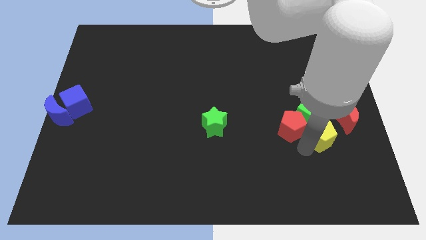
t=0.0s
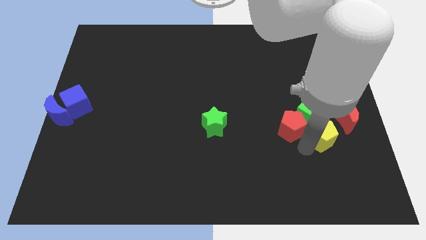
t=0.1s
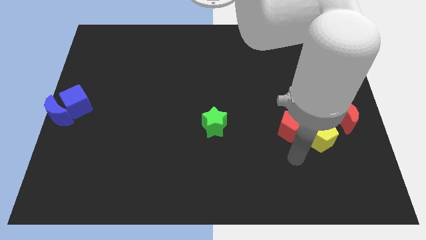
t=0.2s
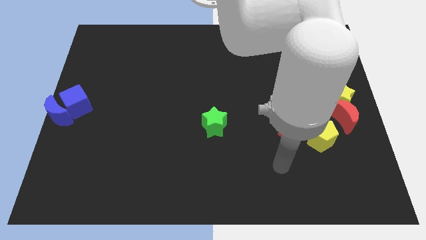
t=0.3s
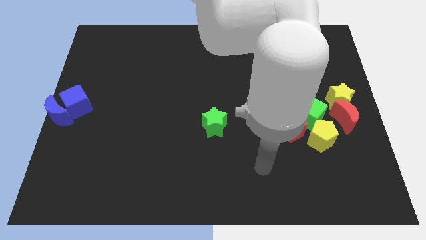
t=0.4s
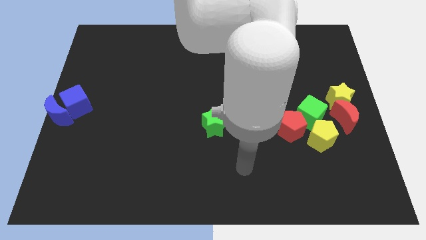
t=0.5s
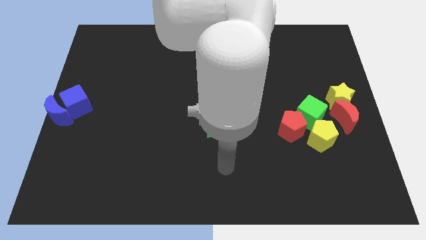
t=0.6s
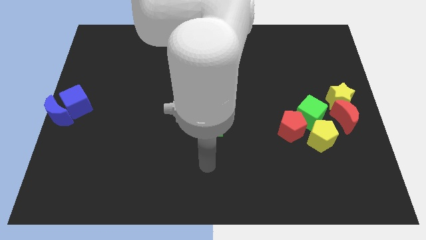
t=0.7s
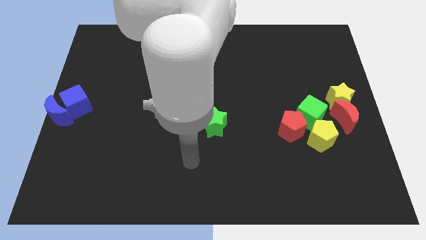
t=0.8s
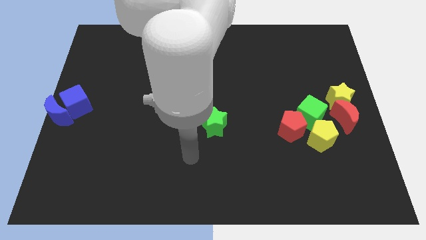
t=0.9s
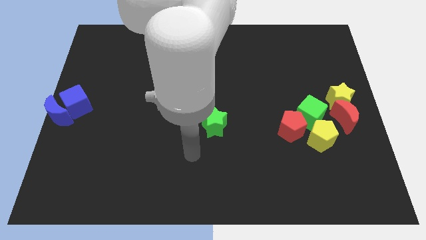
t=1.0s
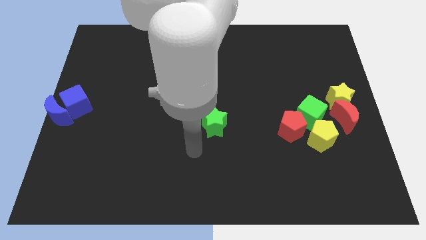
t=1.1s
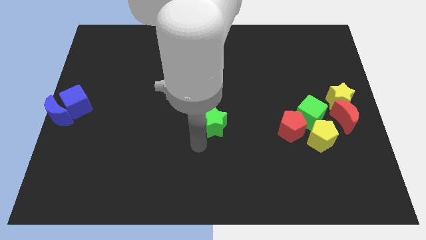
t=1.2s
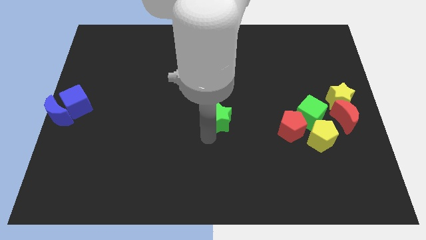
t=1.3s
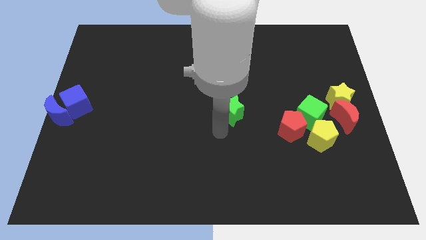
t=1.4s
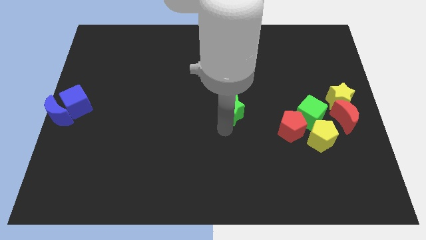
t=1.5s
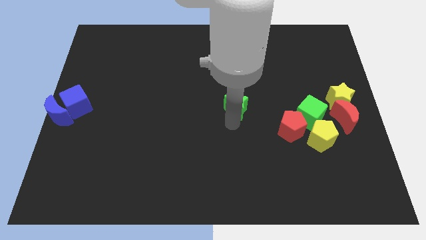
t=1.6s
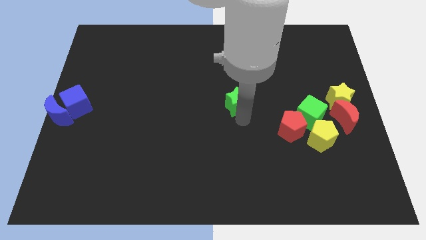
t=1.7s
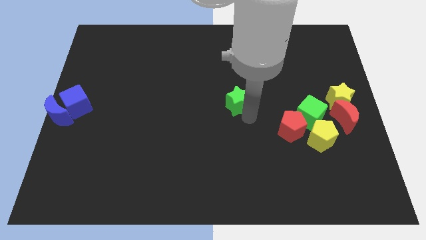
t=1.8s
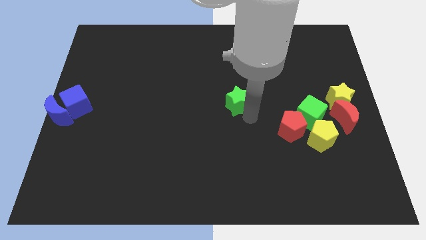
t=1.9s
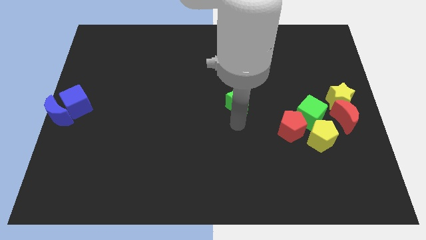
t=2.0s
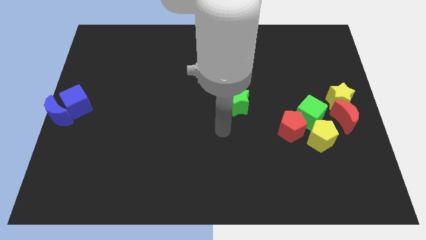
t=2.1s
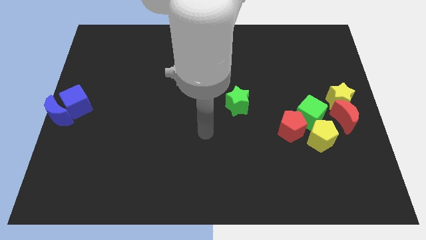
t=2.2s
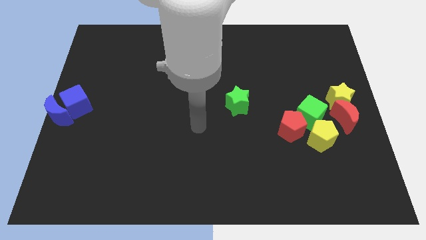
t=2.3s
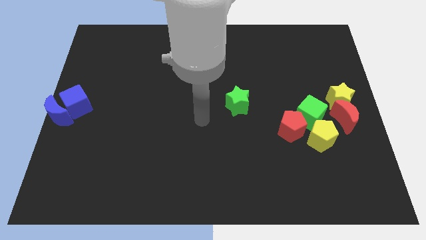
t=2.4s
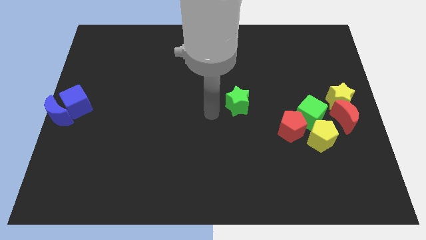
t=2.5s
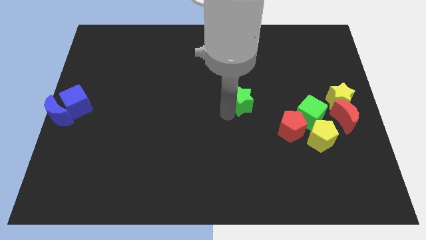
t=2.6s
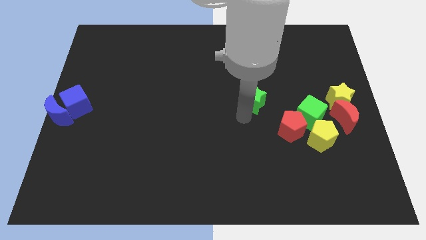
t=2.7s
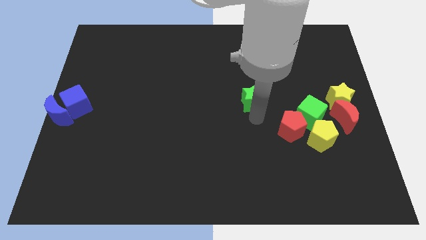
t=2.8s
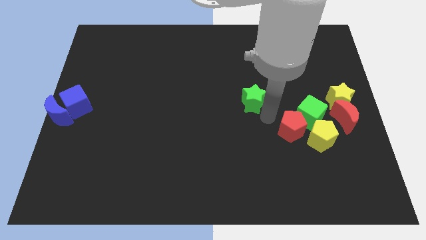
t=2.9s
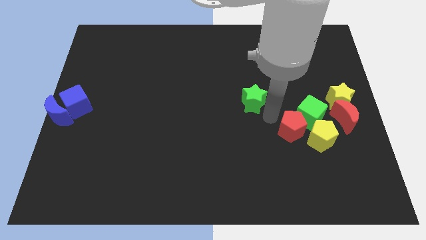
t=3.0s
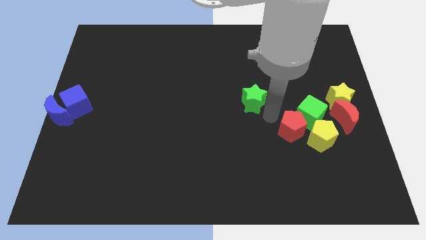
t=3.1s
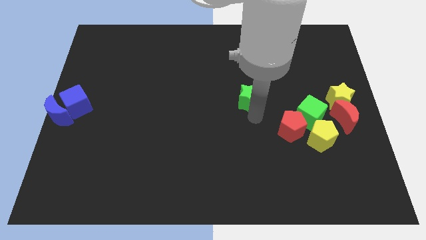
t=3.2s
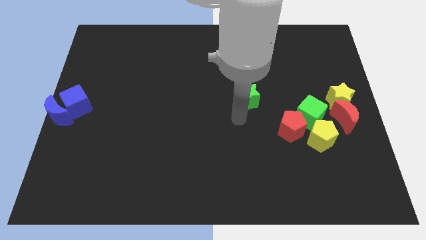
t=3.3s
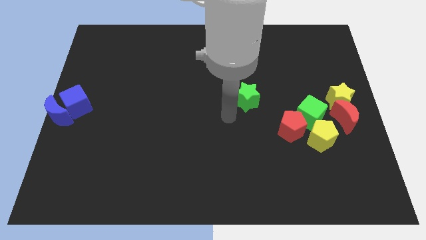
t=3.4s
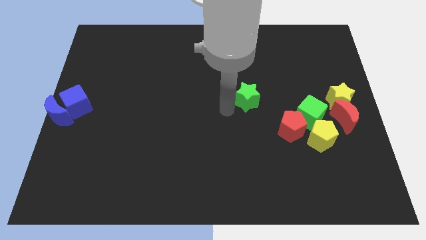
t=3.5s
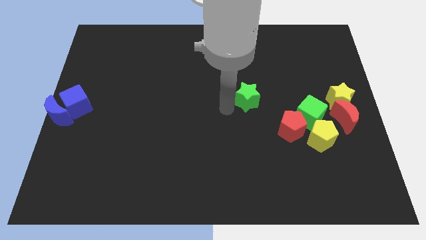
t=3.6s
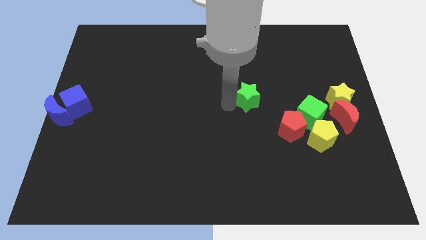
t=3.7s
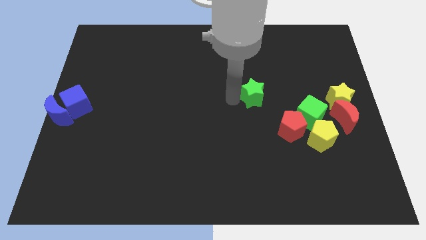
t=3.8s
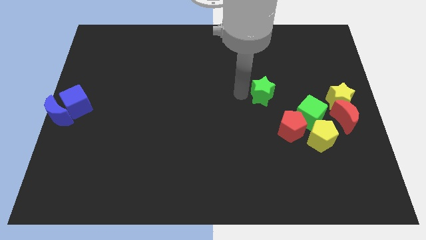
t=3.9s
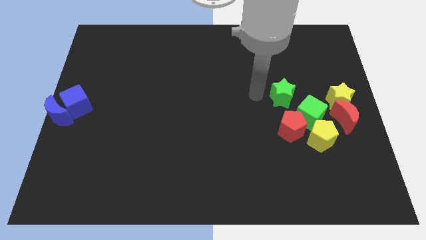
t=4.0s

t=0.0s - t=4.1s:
place the green star diagonally towards left of the green cube

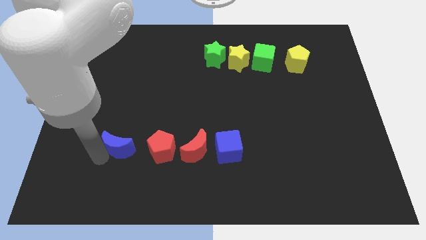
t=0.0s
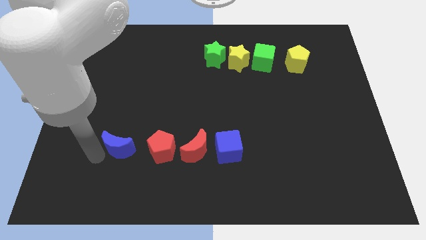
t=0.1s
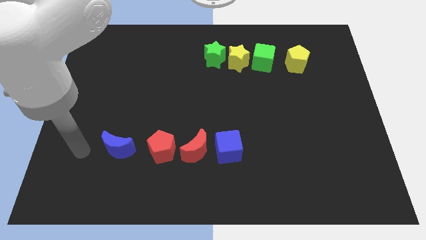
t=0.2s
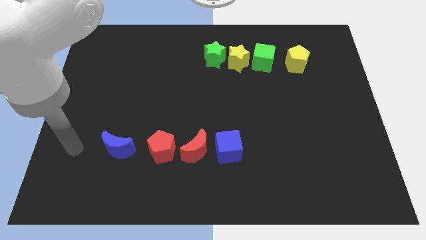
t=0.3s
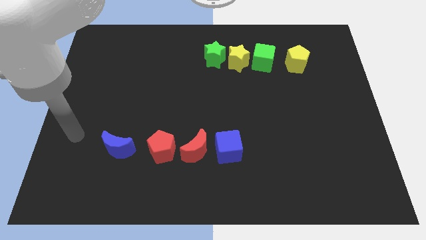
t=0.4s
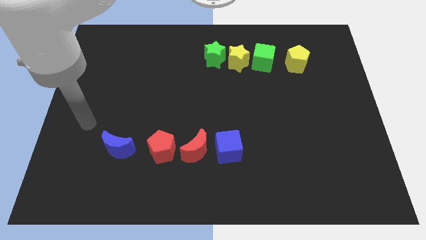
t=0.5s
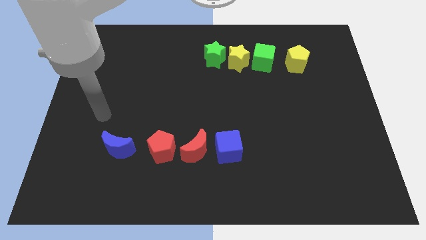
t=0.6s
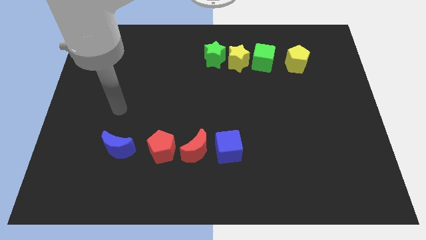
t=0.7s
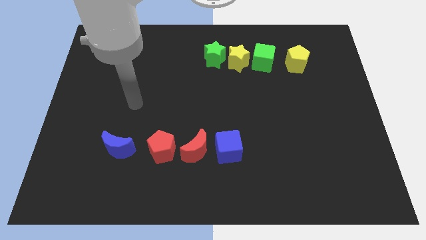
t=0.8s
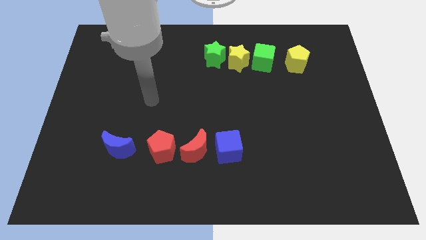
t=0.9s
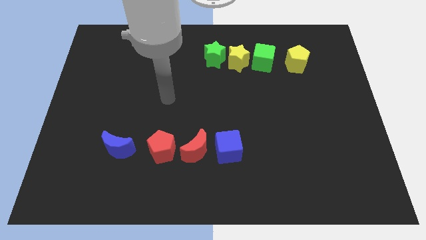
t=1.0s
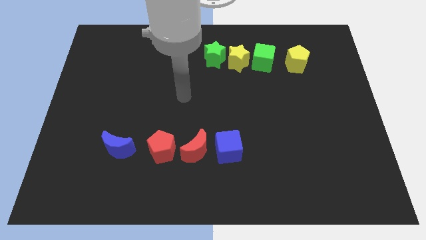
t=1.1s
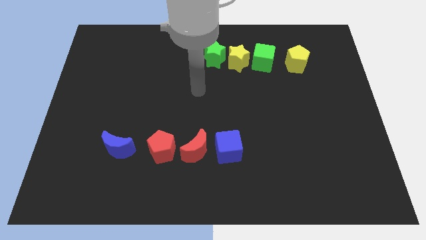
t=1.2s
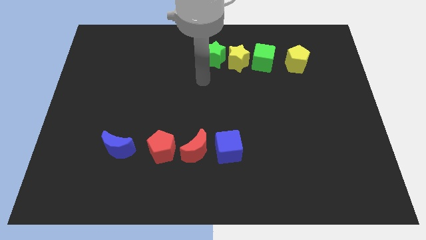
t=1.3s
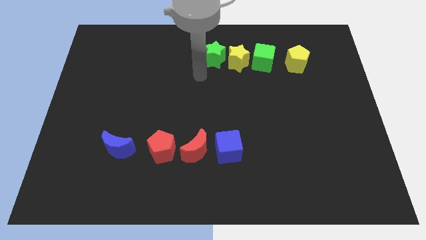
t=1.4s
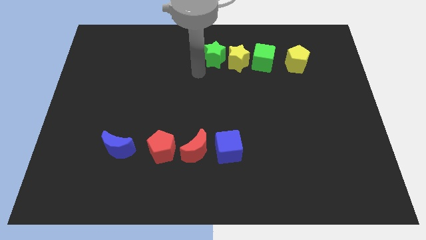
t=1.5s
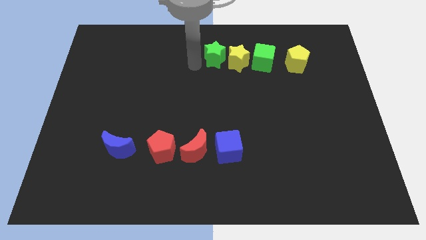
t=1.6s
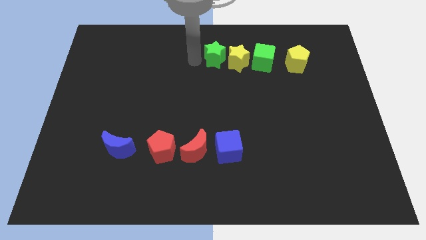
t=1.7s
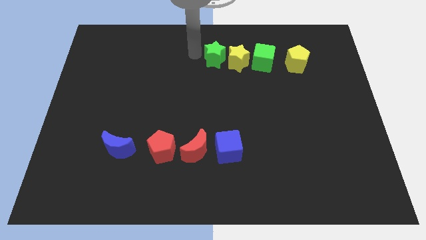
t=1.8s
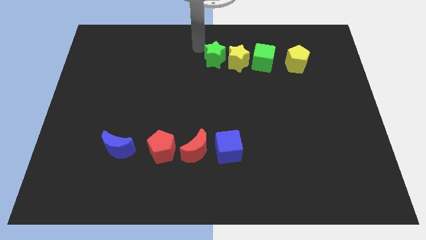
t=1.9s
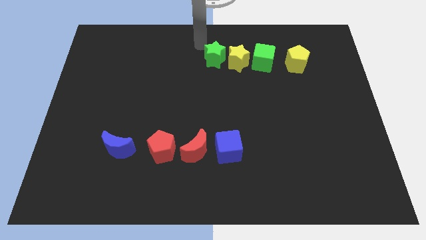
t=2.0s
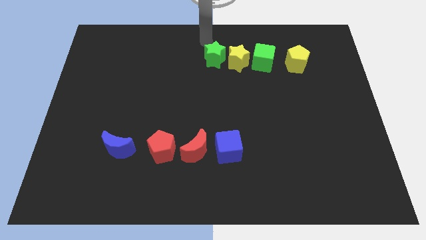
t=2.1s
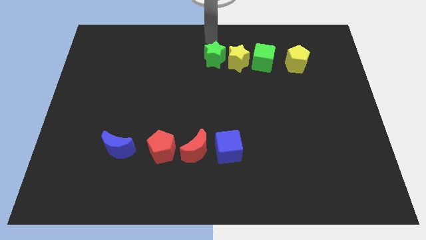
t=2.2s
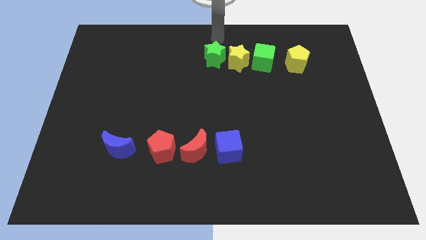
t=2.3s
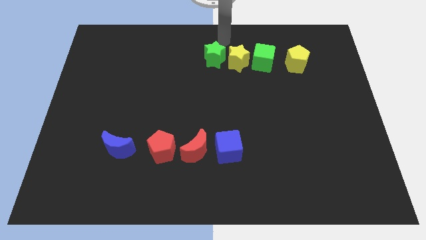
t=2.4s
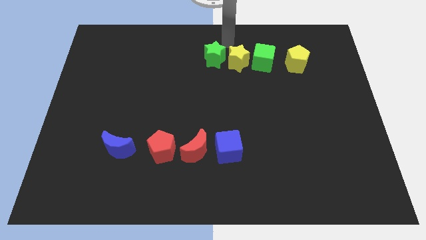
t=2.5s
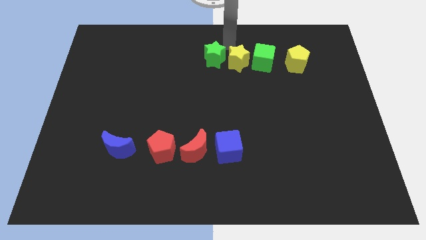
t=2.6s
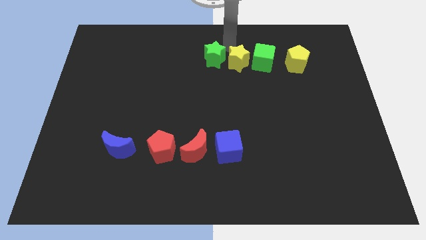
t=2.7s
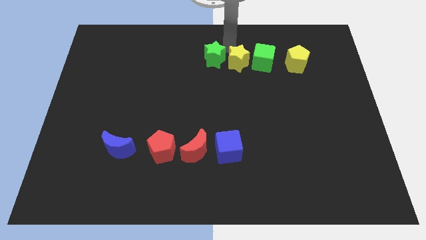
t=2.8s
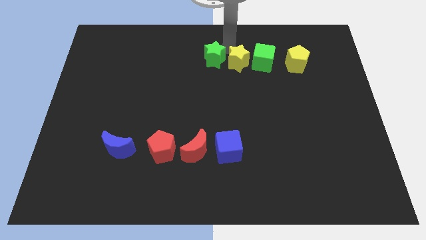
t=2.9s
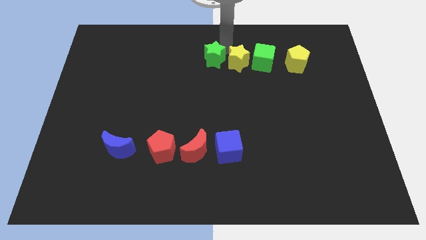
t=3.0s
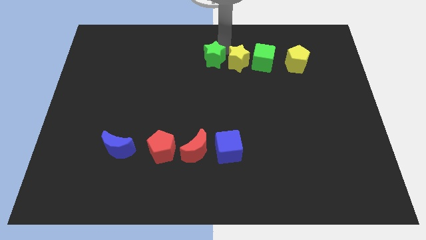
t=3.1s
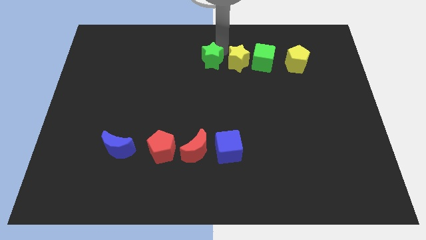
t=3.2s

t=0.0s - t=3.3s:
tap the top side of the green star

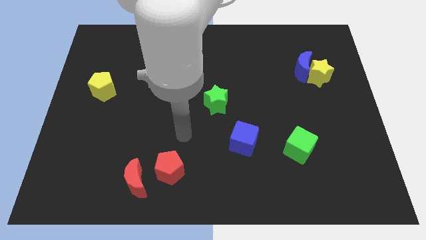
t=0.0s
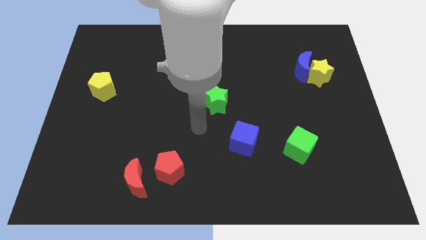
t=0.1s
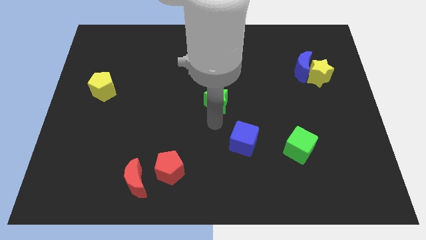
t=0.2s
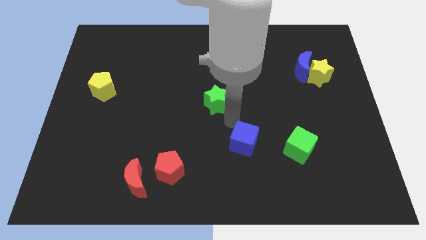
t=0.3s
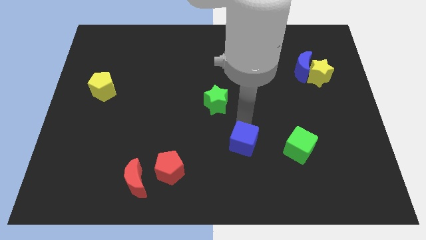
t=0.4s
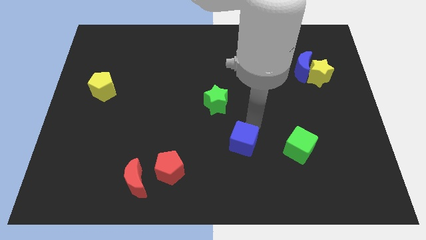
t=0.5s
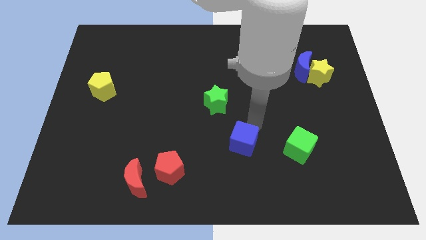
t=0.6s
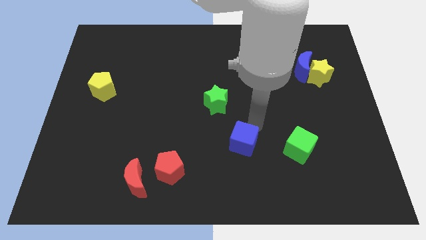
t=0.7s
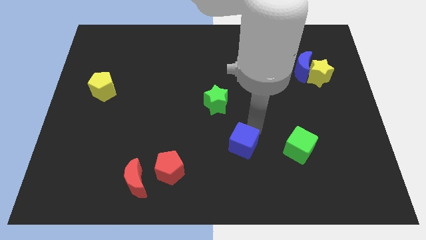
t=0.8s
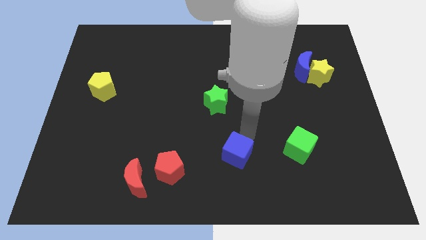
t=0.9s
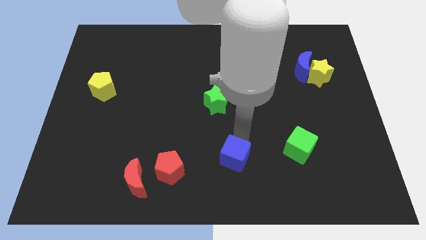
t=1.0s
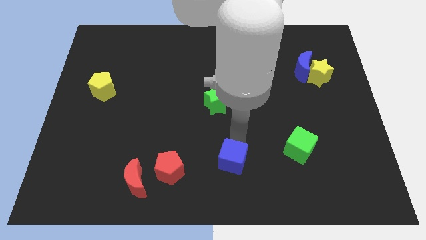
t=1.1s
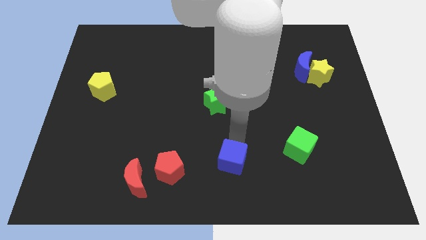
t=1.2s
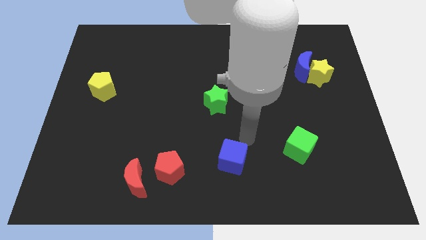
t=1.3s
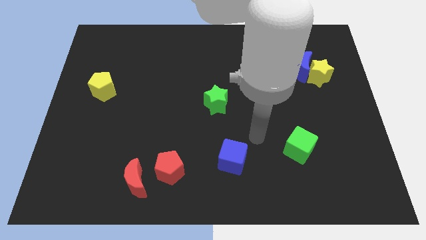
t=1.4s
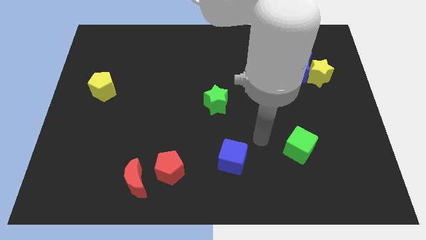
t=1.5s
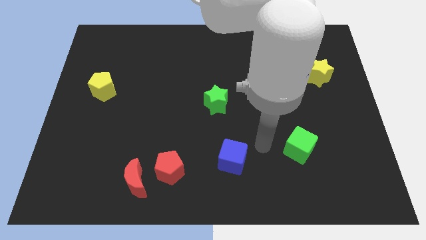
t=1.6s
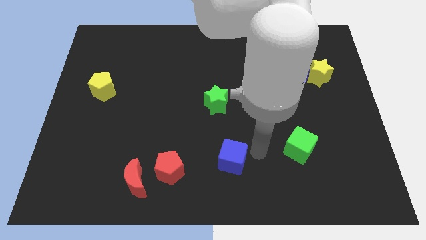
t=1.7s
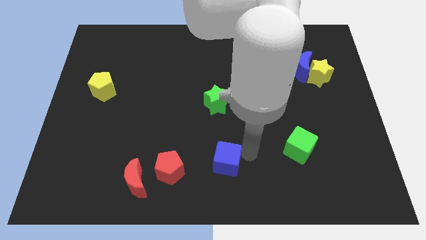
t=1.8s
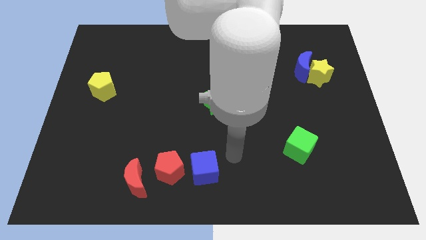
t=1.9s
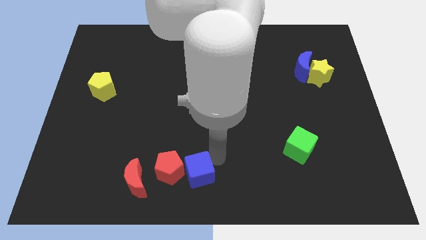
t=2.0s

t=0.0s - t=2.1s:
move the blue cube to the right of the red pentagon
